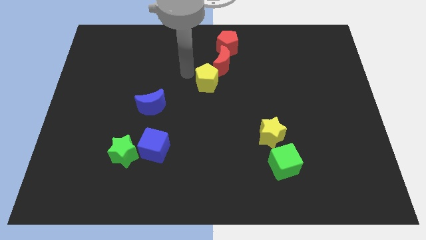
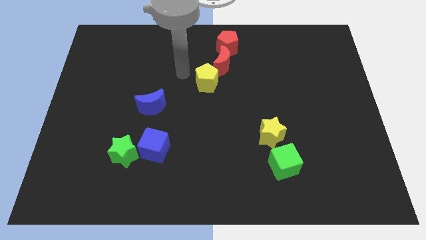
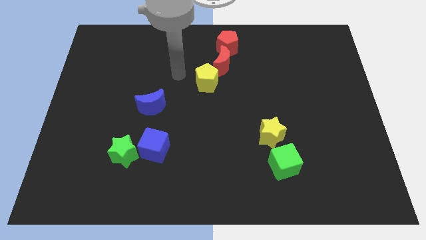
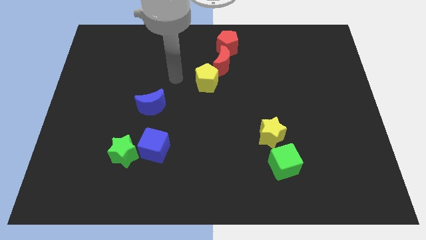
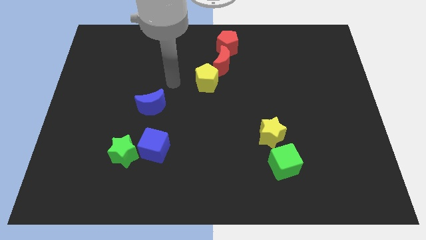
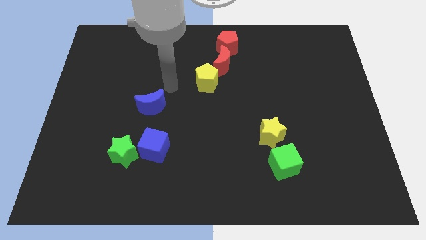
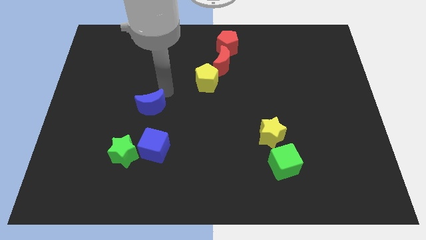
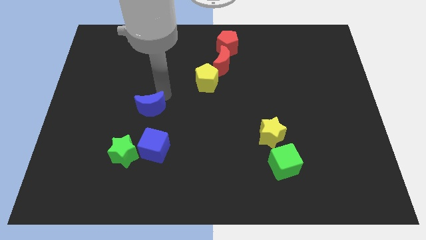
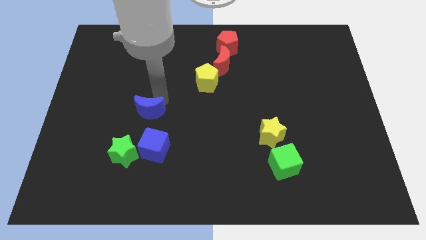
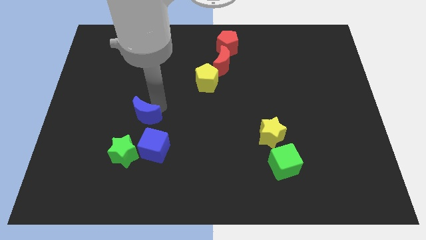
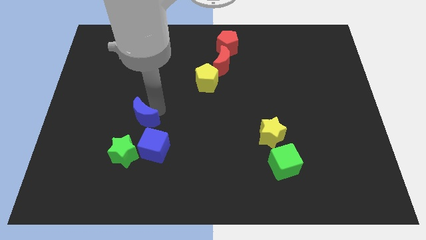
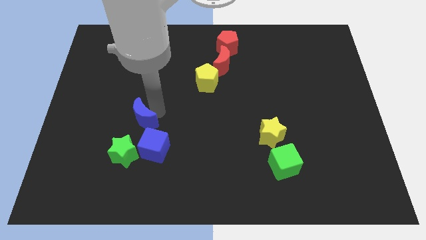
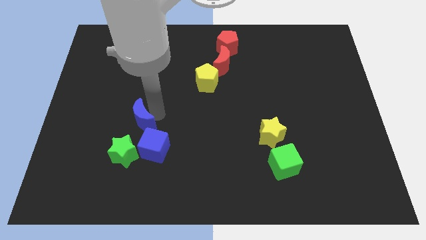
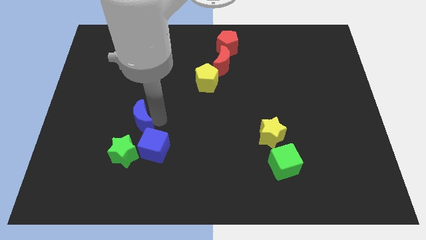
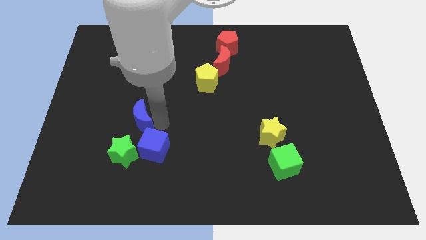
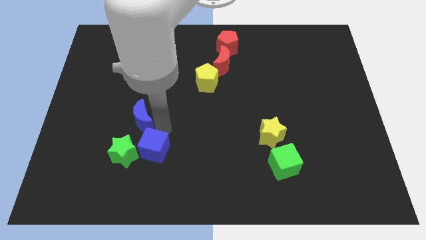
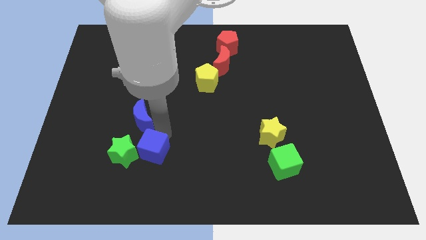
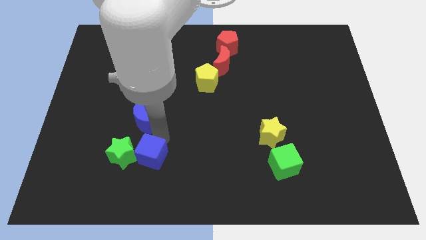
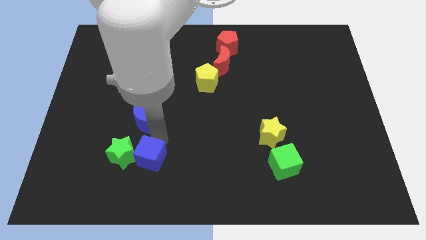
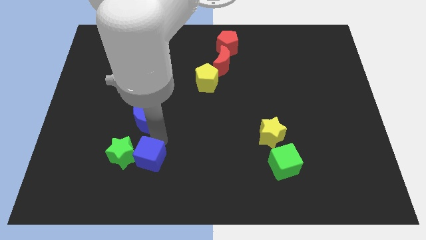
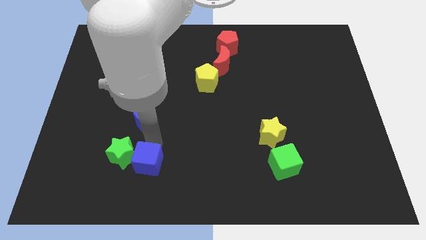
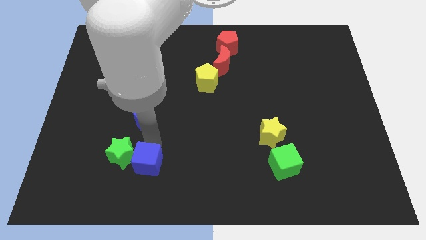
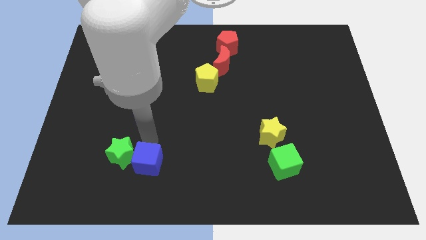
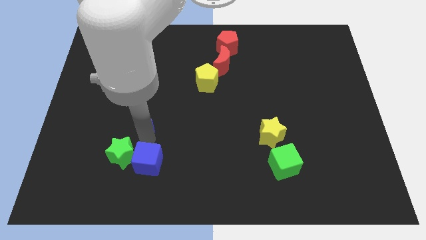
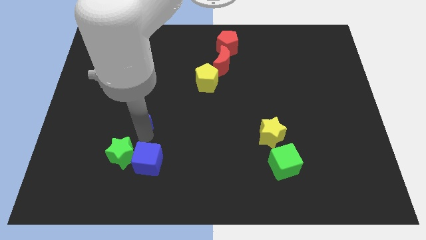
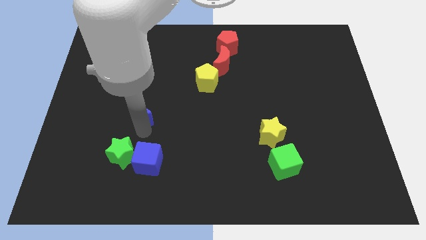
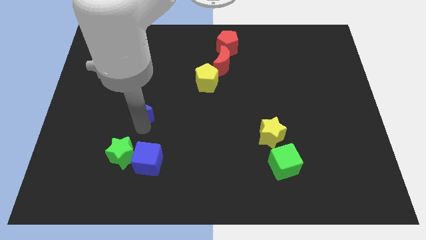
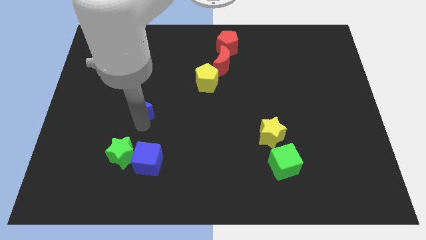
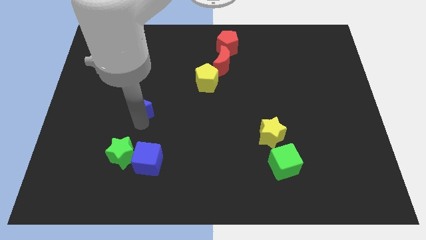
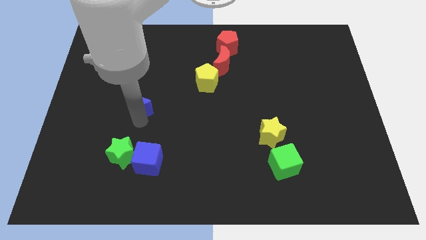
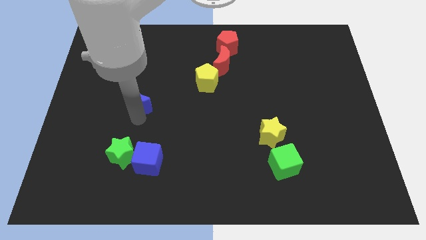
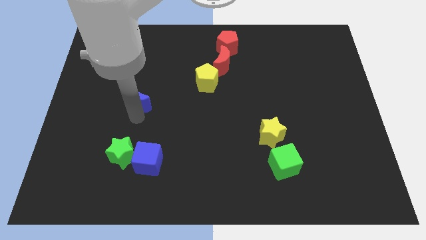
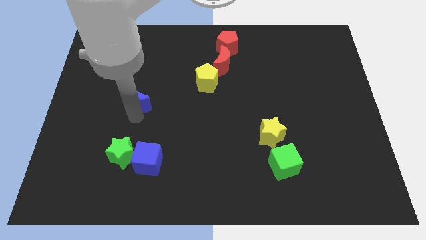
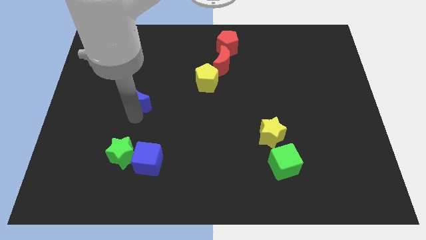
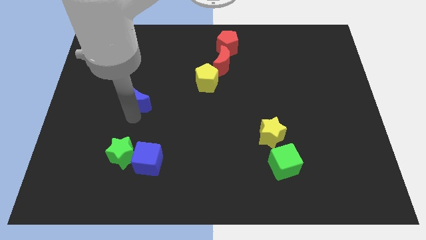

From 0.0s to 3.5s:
move the blue crescent to the top left side of the blue cube

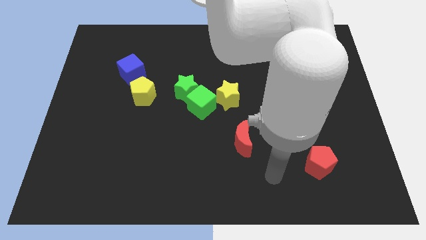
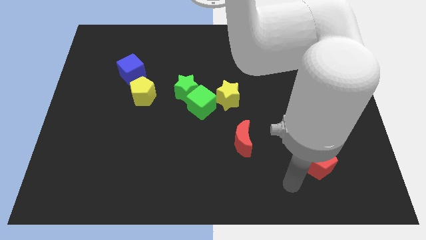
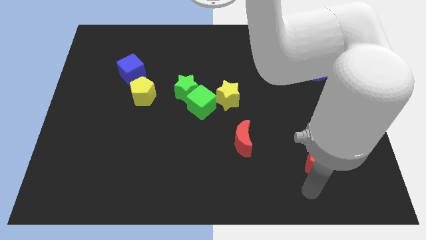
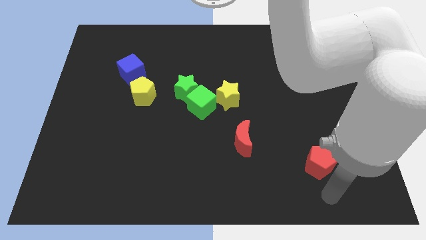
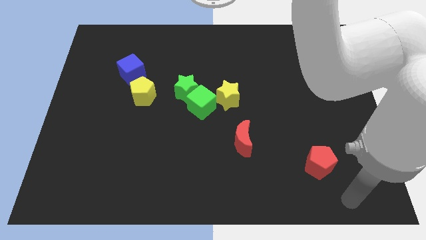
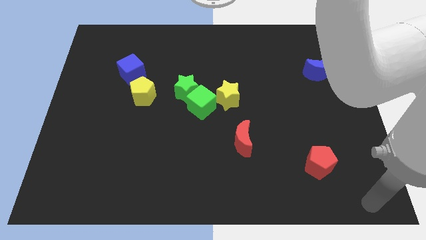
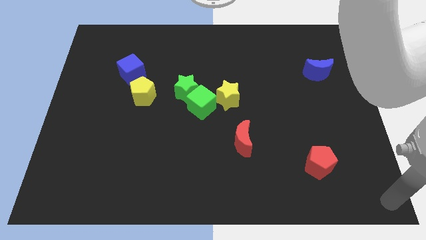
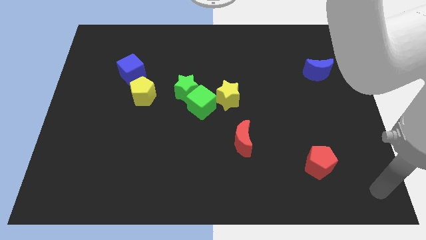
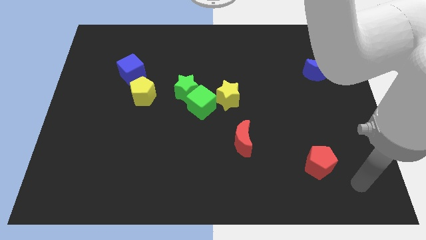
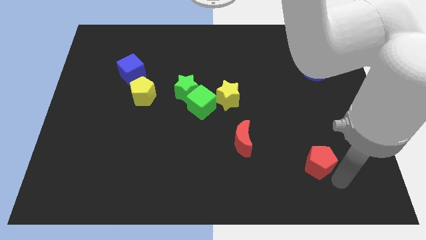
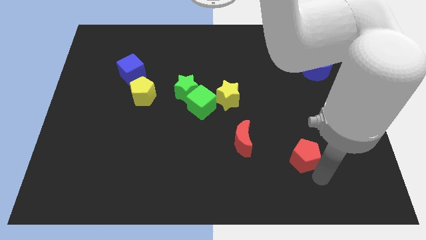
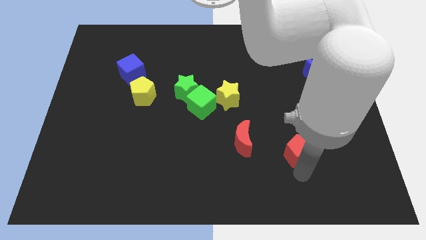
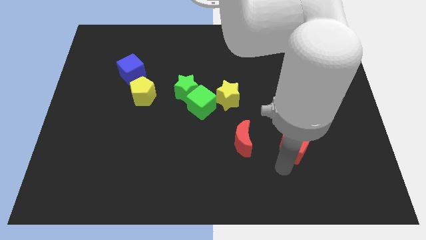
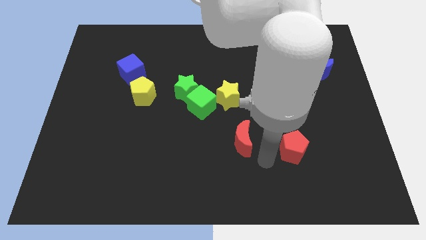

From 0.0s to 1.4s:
push red pentagon towards the red moon

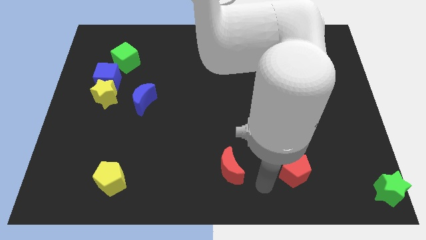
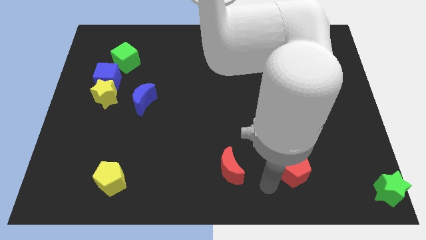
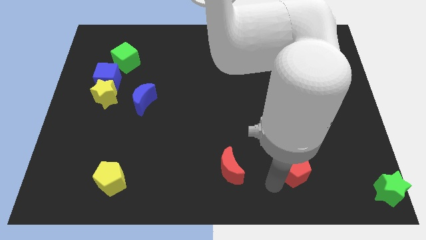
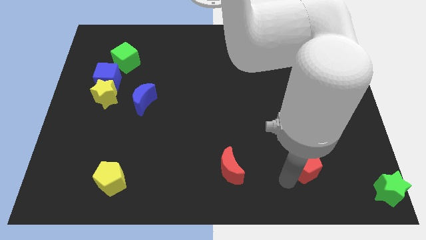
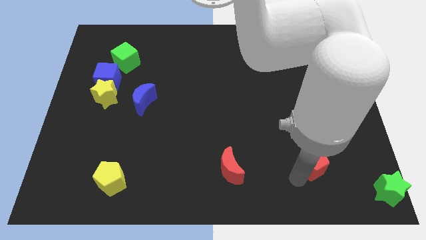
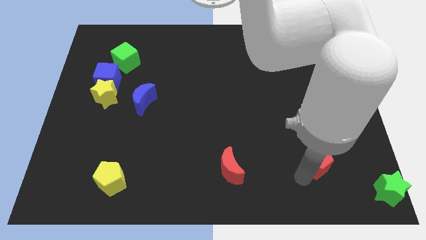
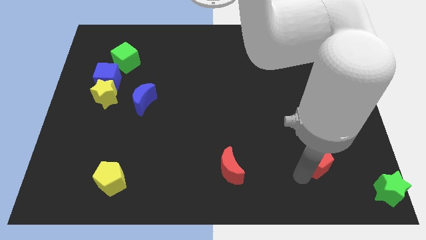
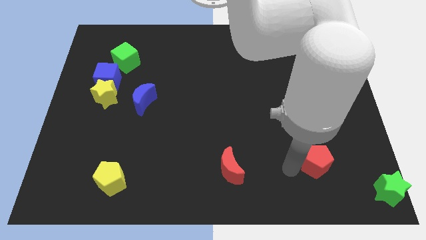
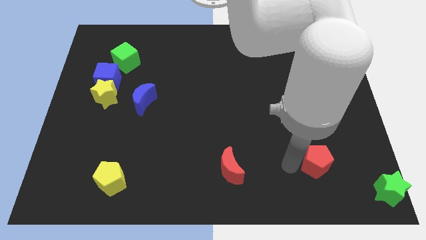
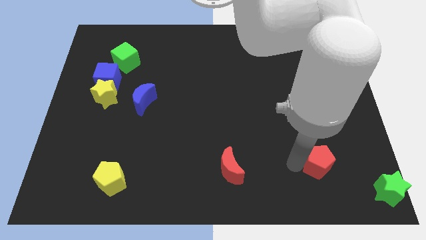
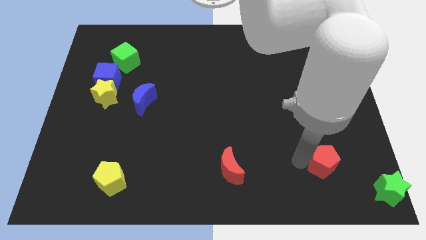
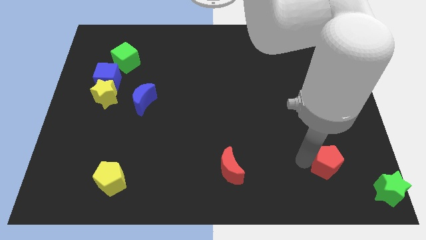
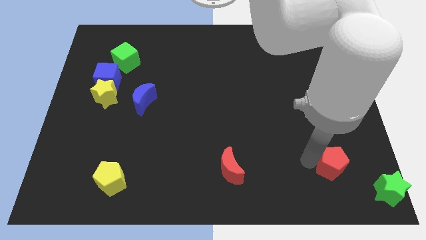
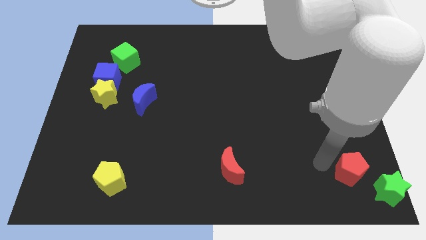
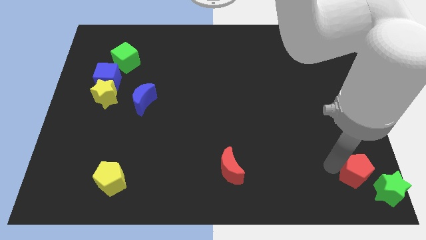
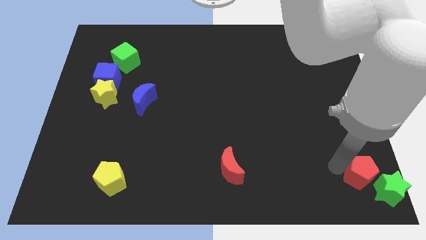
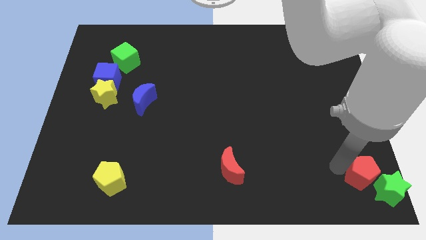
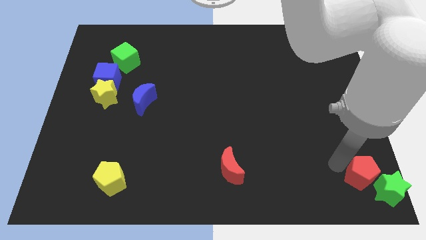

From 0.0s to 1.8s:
move the red pentagon diagonally on the top left side of the green star

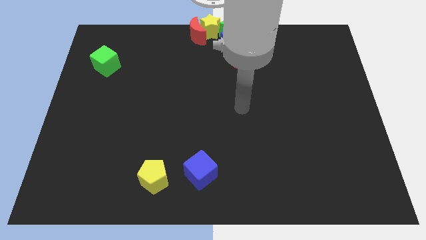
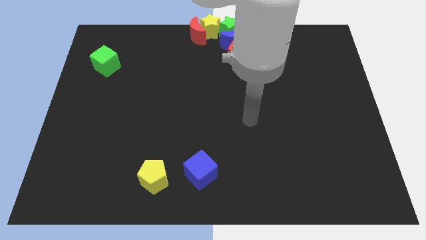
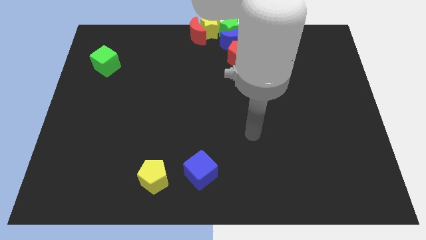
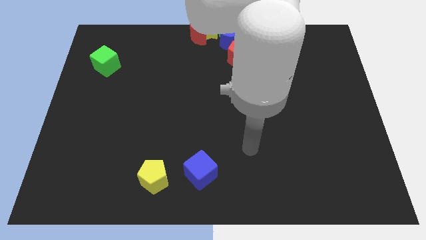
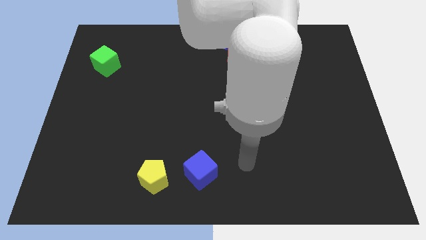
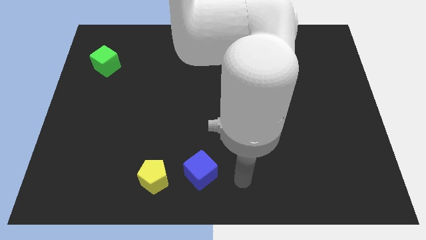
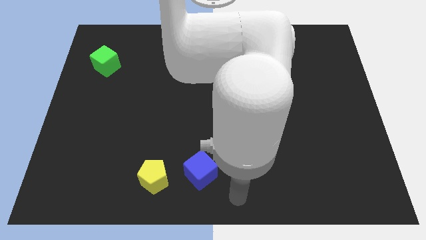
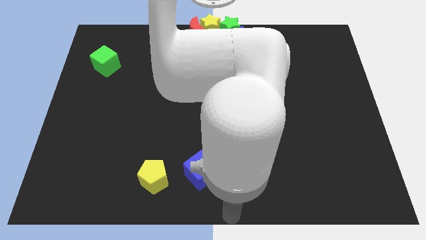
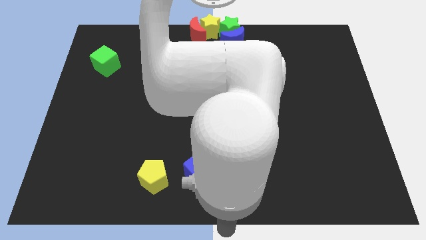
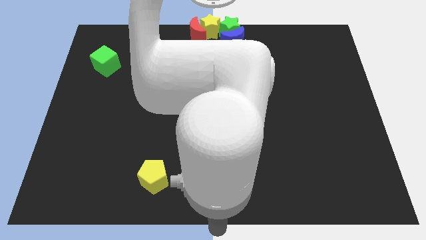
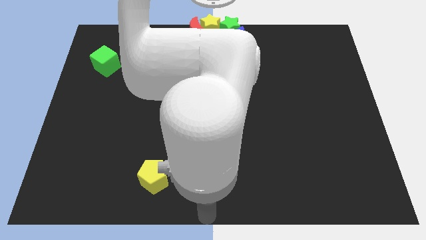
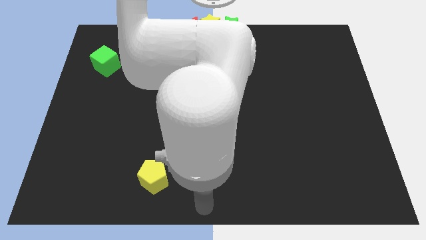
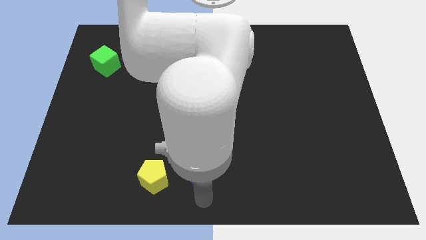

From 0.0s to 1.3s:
point your arm at the bottom side of the blue cube

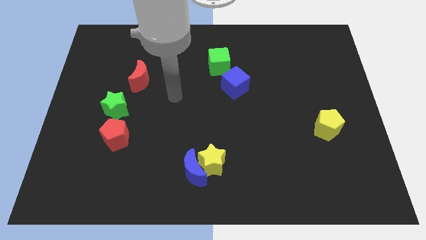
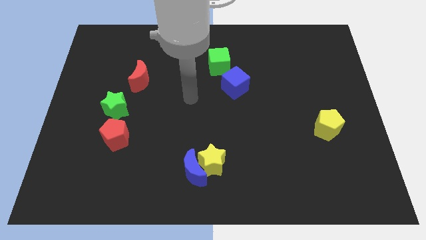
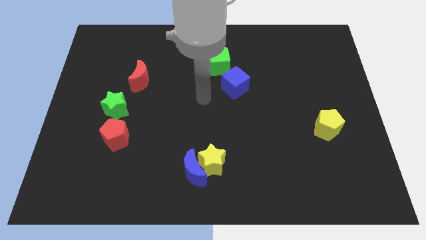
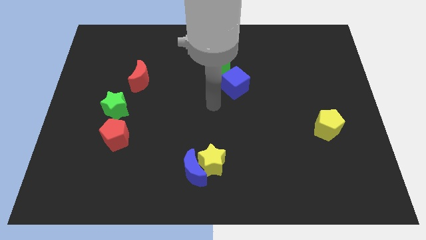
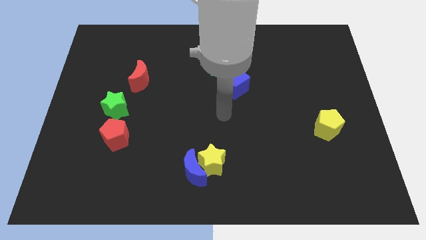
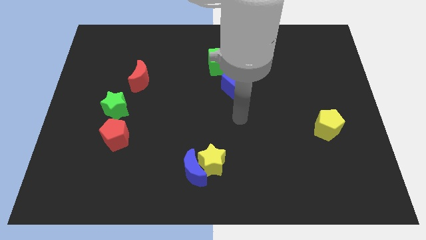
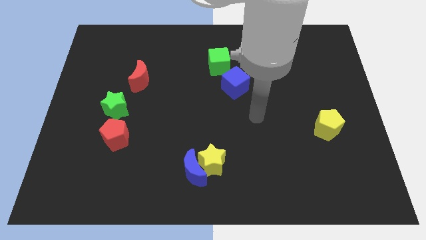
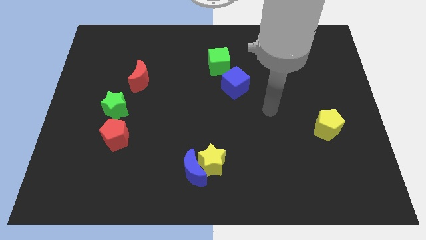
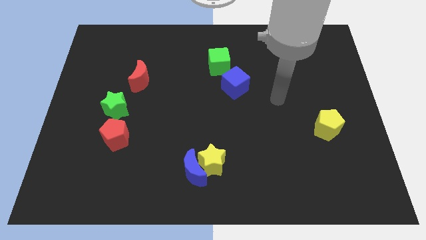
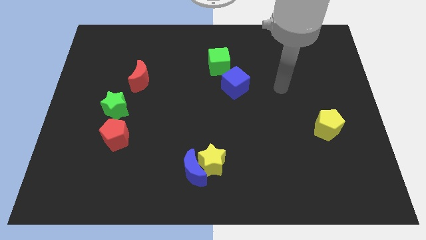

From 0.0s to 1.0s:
drag the pointer to the right side of the blue cube
